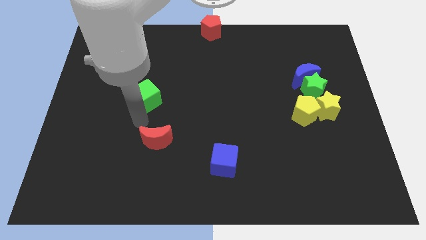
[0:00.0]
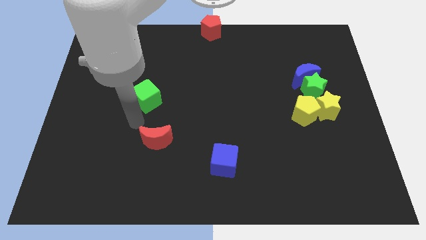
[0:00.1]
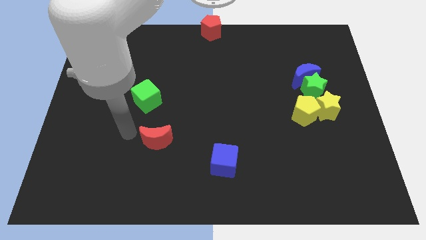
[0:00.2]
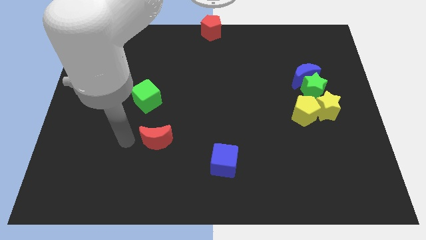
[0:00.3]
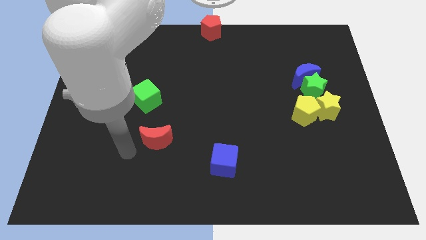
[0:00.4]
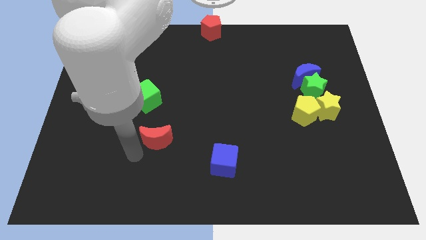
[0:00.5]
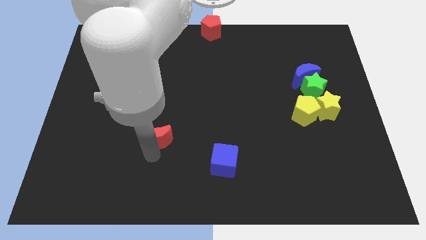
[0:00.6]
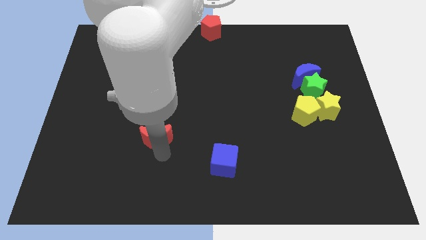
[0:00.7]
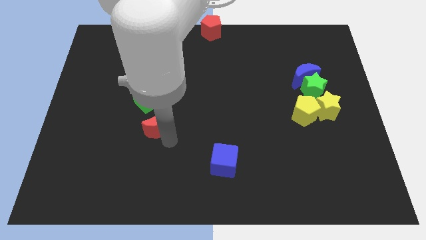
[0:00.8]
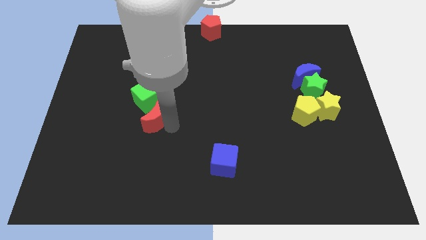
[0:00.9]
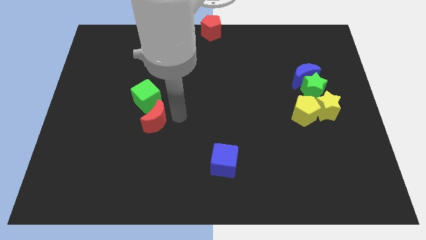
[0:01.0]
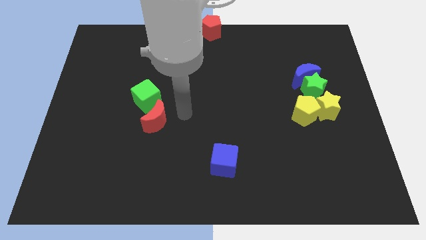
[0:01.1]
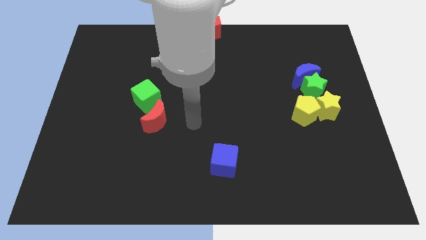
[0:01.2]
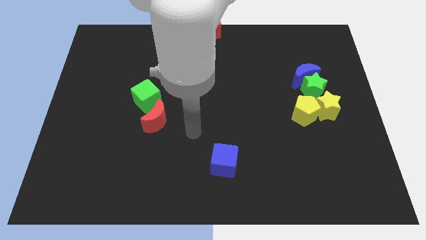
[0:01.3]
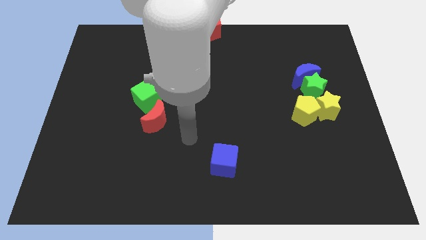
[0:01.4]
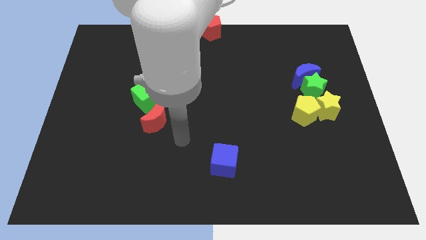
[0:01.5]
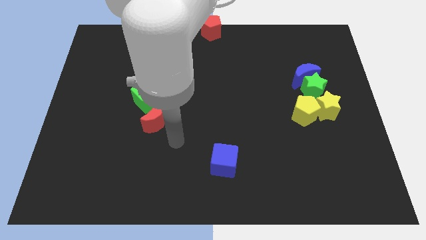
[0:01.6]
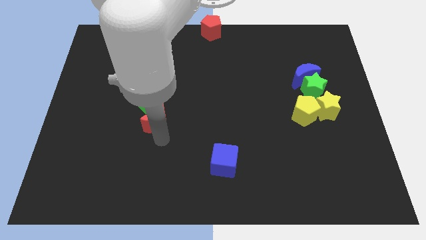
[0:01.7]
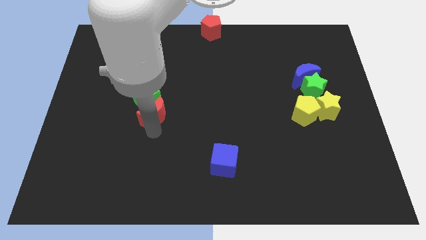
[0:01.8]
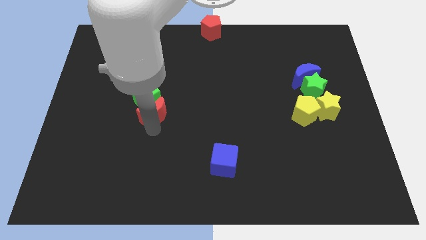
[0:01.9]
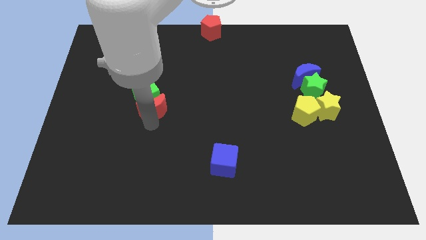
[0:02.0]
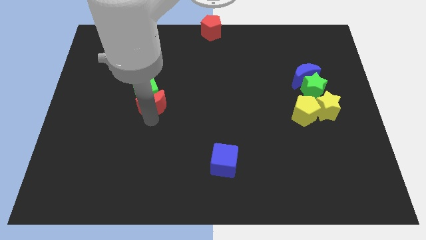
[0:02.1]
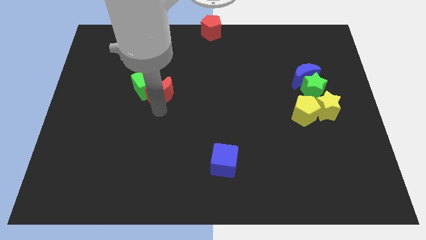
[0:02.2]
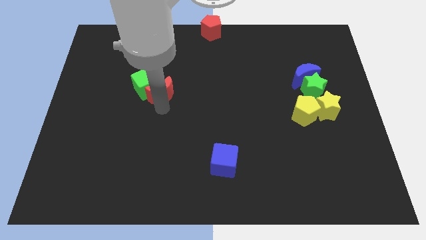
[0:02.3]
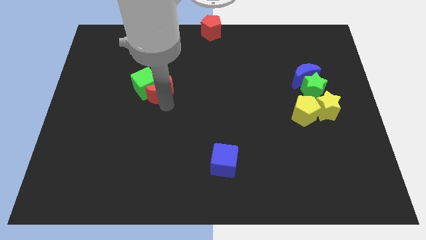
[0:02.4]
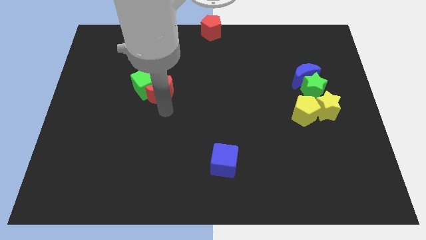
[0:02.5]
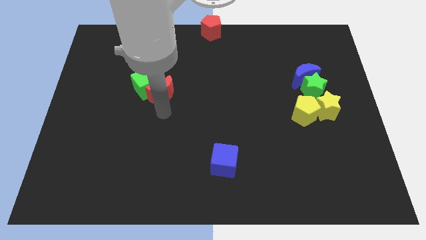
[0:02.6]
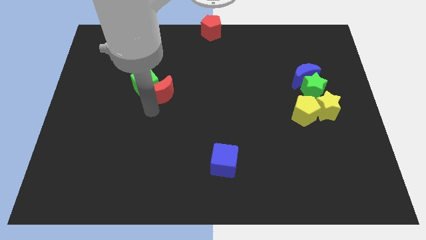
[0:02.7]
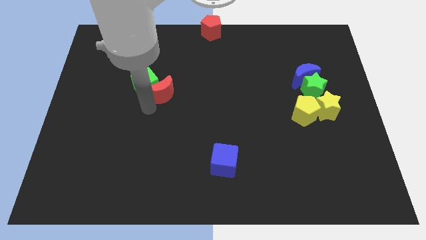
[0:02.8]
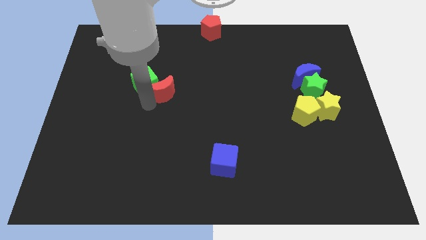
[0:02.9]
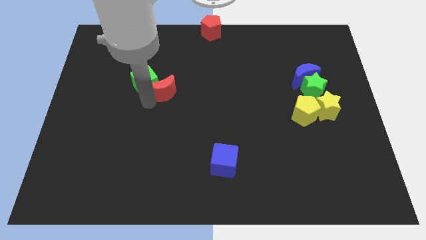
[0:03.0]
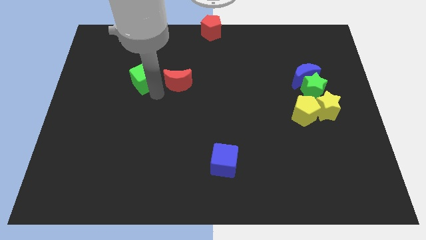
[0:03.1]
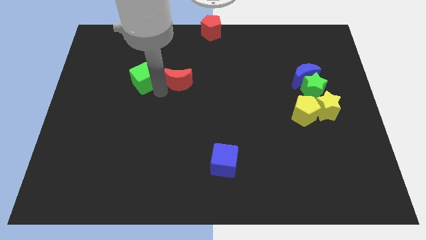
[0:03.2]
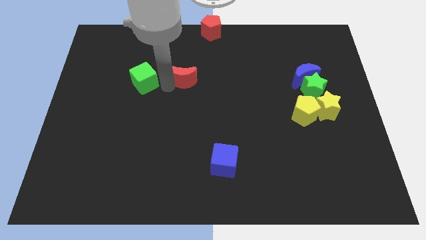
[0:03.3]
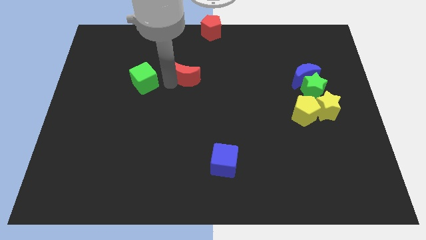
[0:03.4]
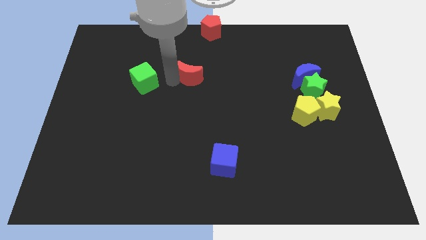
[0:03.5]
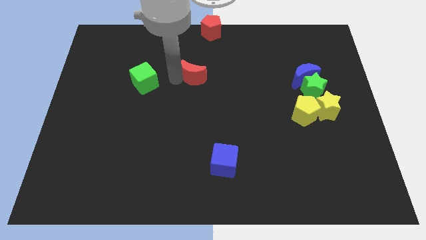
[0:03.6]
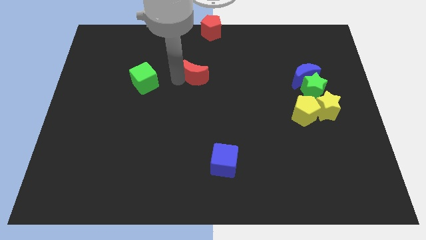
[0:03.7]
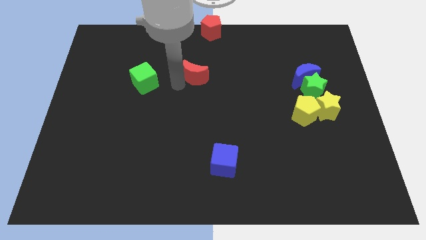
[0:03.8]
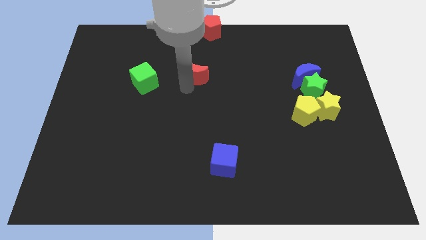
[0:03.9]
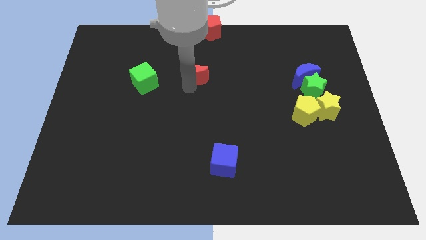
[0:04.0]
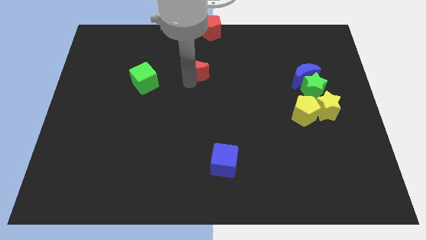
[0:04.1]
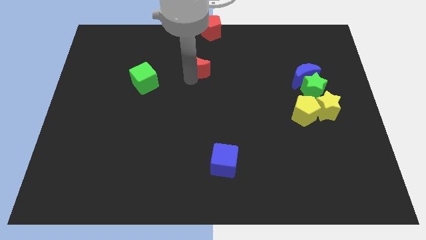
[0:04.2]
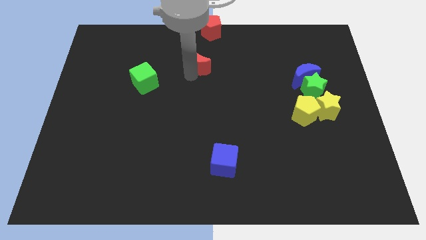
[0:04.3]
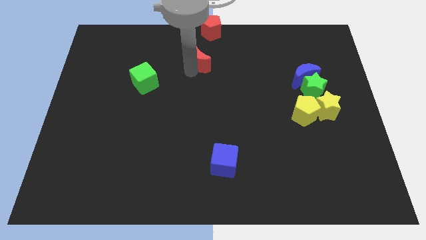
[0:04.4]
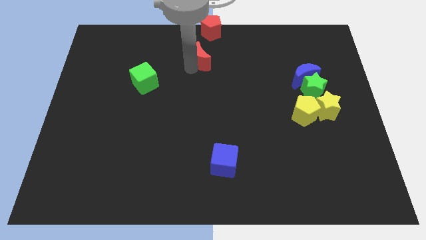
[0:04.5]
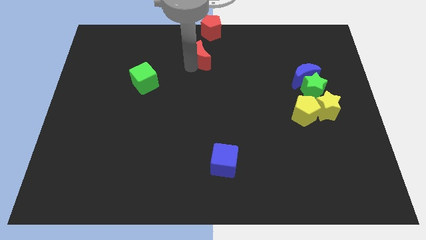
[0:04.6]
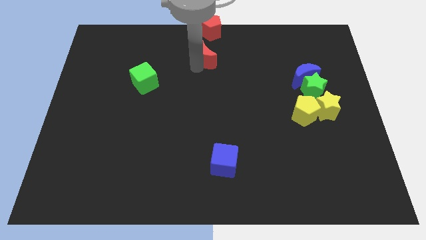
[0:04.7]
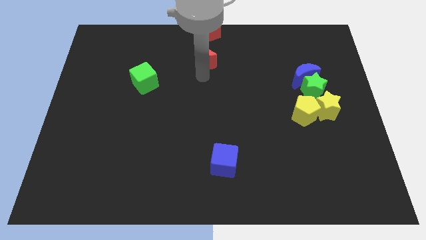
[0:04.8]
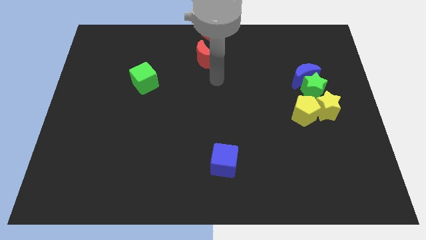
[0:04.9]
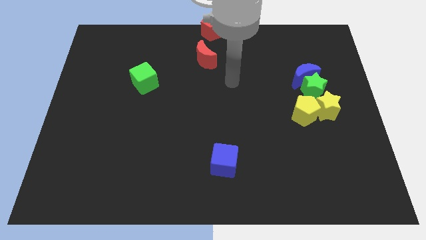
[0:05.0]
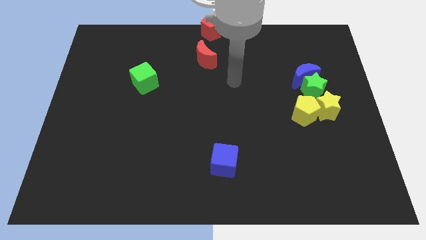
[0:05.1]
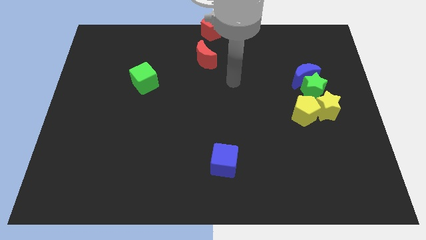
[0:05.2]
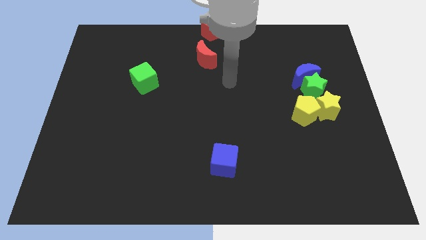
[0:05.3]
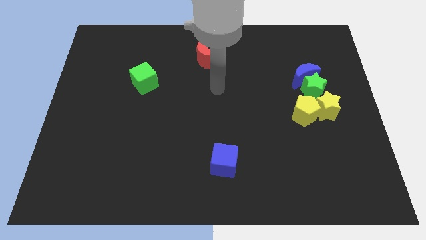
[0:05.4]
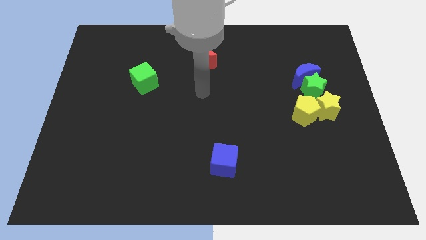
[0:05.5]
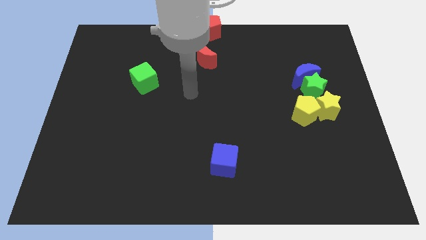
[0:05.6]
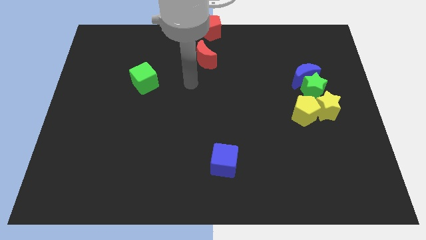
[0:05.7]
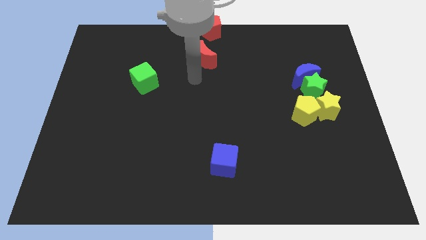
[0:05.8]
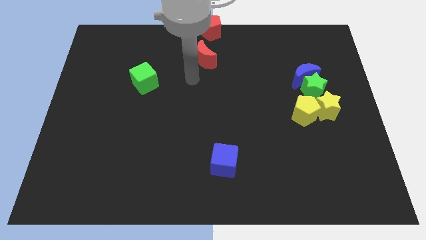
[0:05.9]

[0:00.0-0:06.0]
place red moon vertical to red pentagon

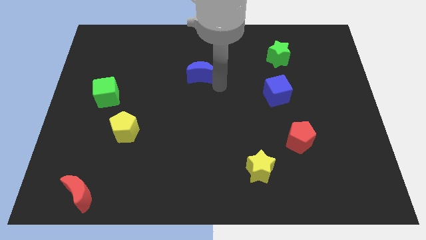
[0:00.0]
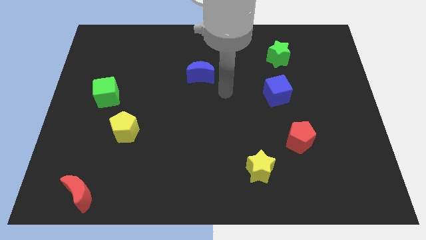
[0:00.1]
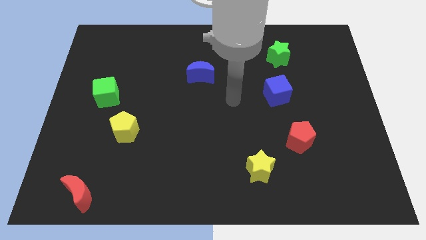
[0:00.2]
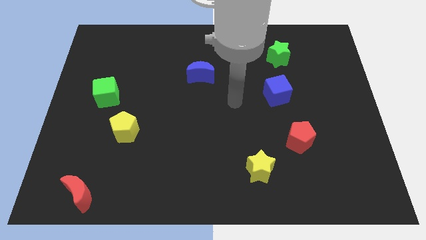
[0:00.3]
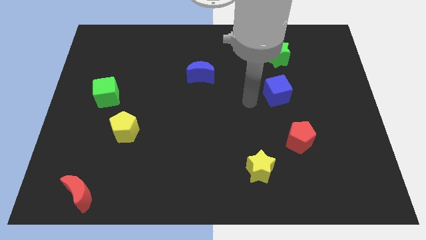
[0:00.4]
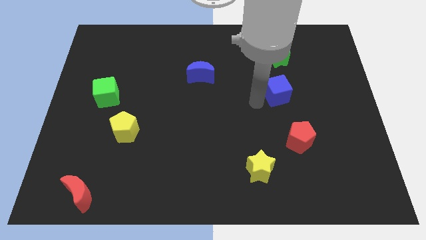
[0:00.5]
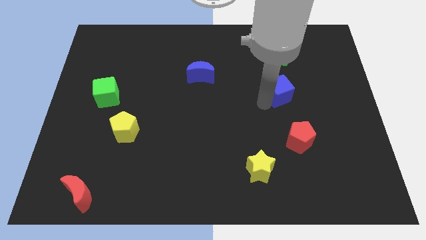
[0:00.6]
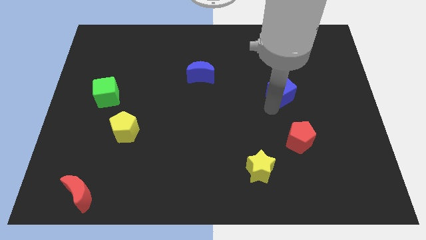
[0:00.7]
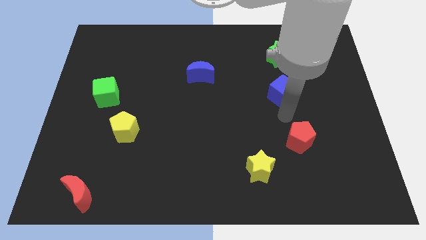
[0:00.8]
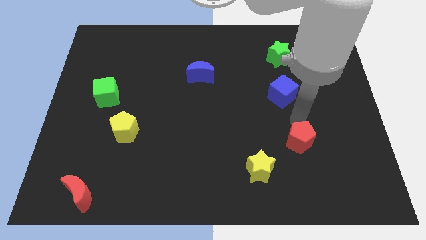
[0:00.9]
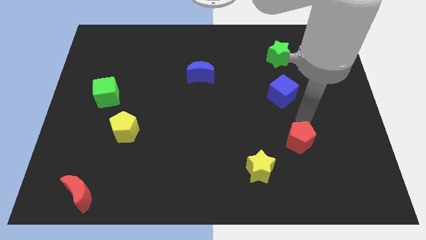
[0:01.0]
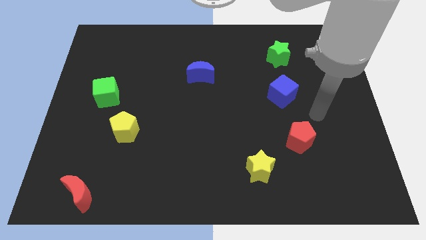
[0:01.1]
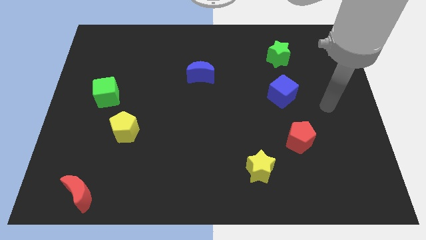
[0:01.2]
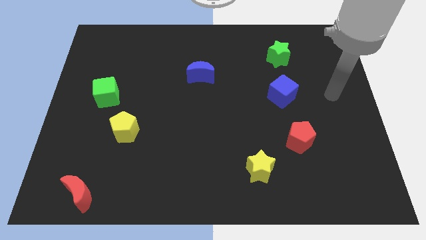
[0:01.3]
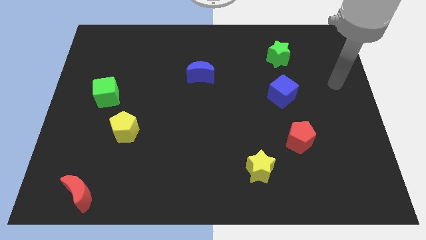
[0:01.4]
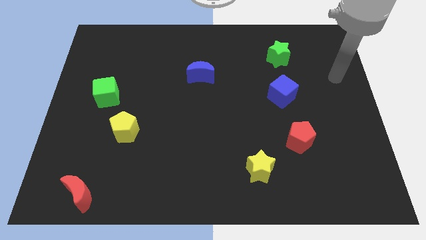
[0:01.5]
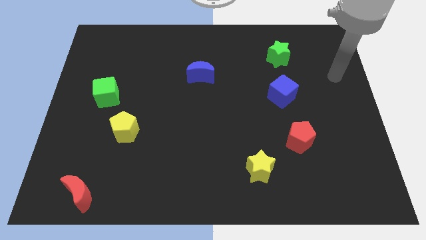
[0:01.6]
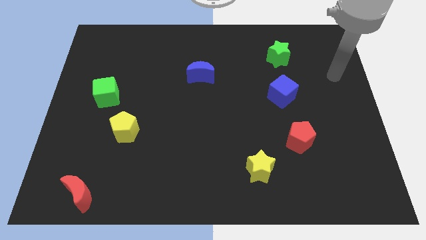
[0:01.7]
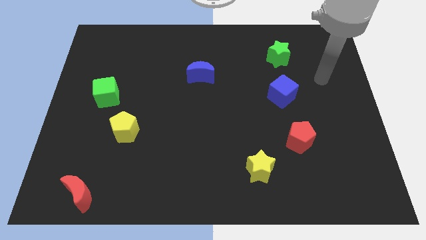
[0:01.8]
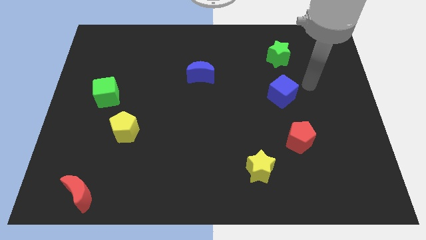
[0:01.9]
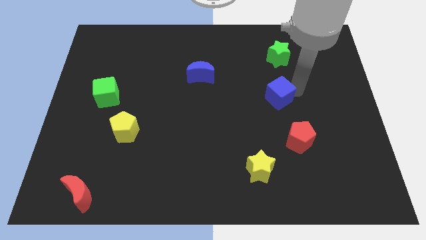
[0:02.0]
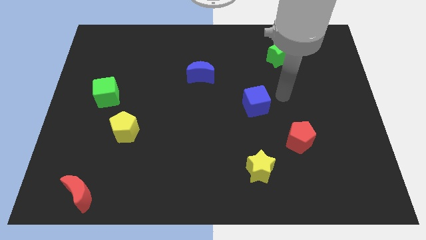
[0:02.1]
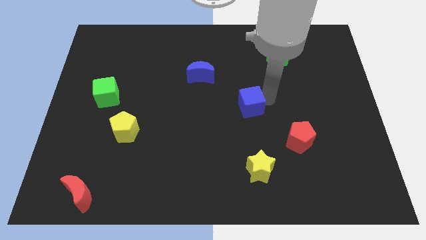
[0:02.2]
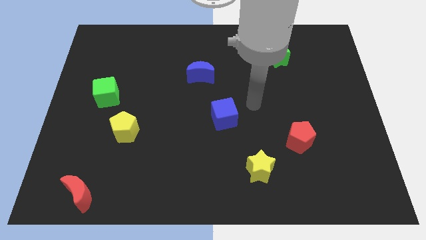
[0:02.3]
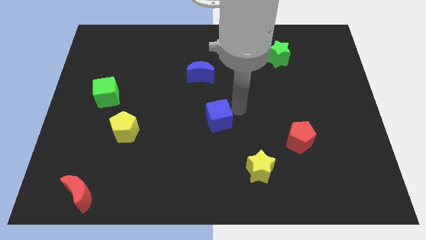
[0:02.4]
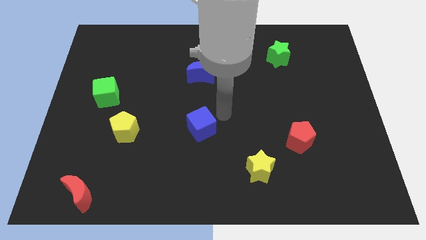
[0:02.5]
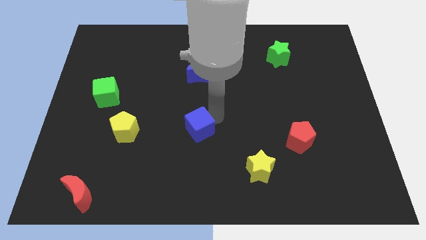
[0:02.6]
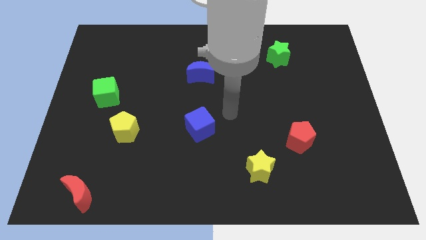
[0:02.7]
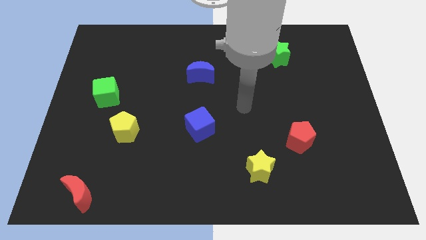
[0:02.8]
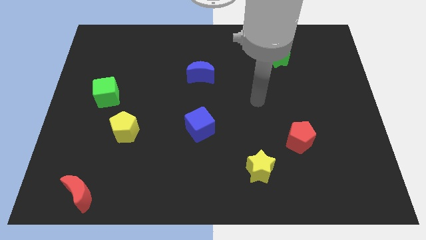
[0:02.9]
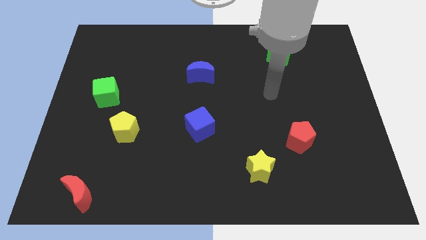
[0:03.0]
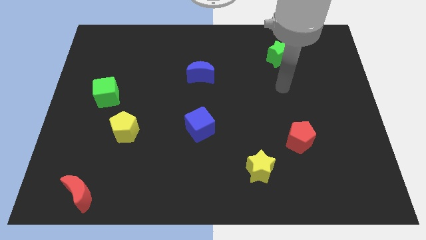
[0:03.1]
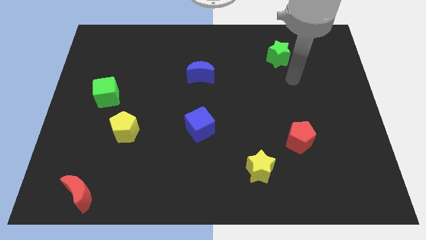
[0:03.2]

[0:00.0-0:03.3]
place the blue cube underneath the blue crescent
